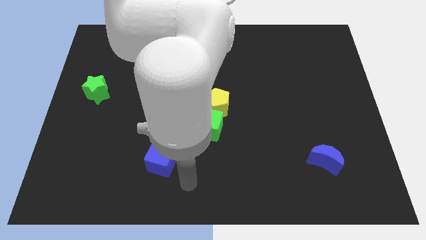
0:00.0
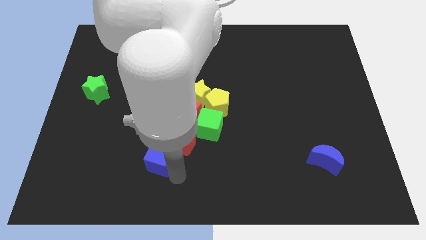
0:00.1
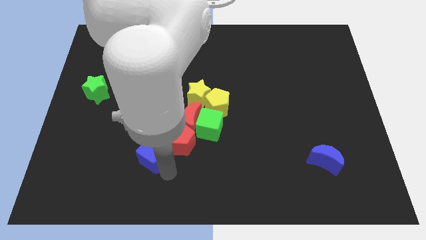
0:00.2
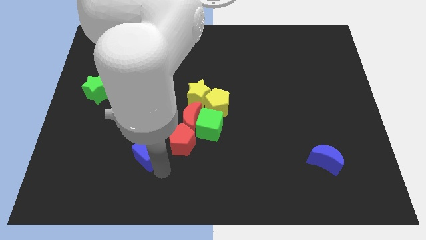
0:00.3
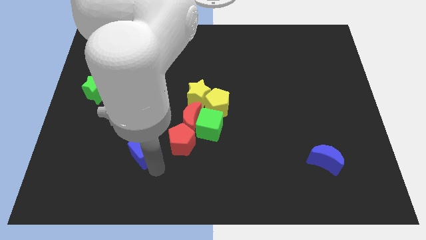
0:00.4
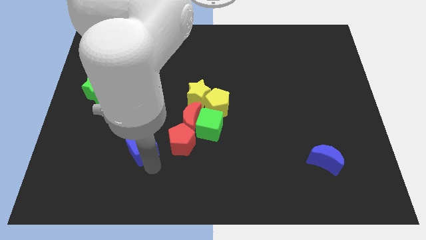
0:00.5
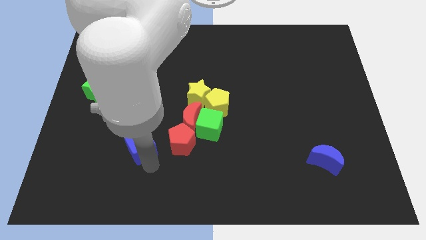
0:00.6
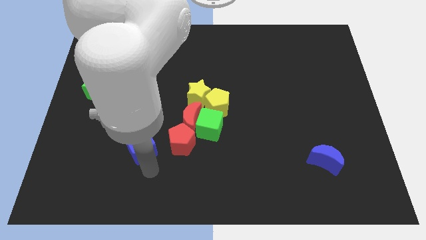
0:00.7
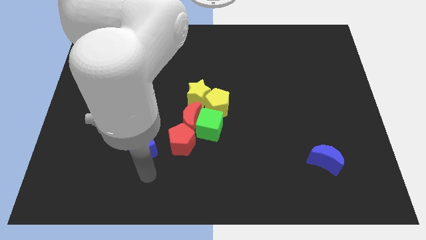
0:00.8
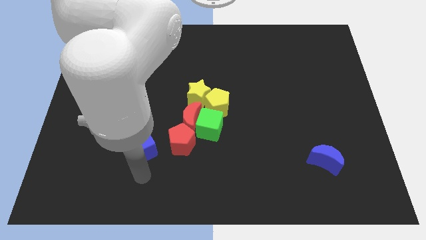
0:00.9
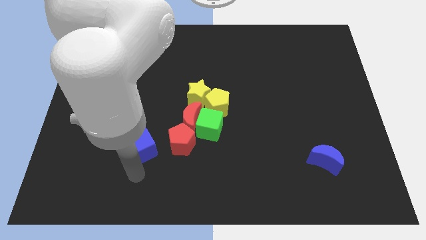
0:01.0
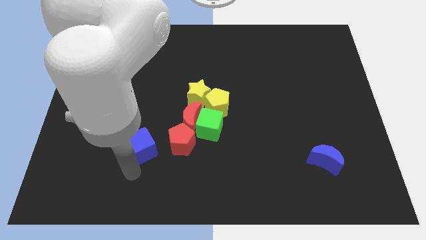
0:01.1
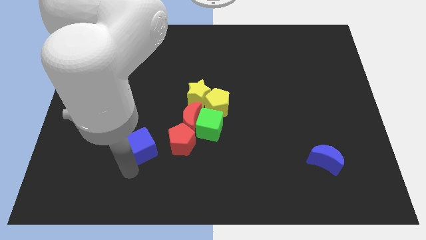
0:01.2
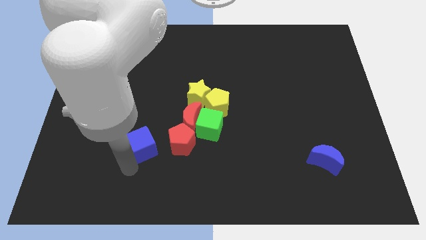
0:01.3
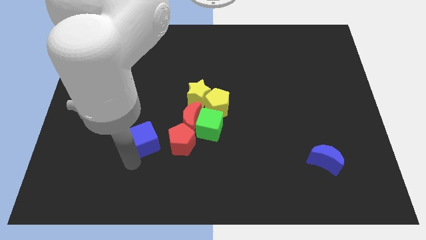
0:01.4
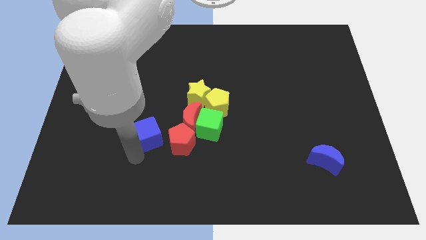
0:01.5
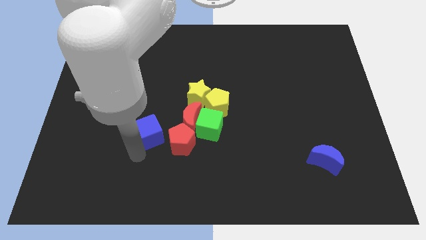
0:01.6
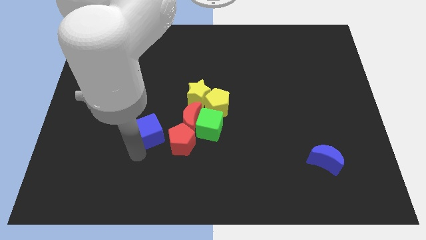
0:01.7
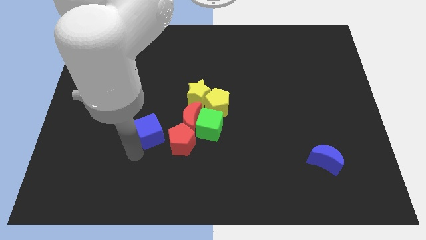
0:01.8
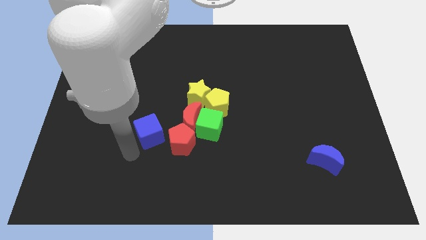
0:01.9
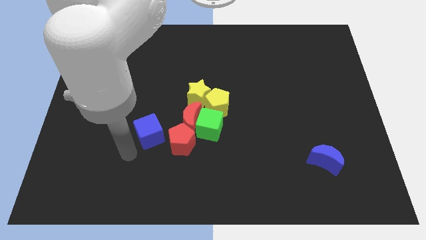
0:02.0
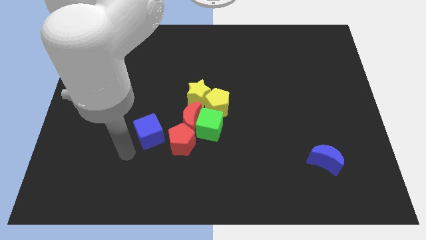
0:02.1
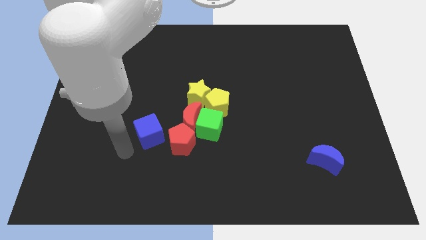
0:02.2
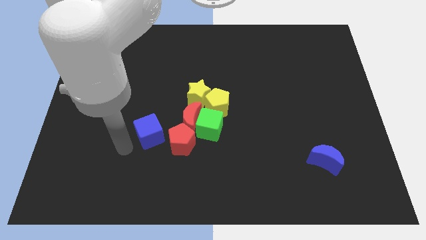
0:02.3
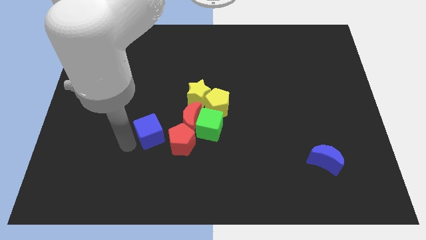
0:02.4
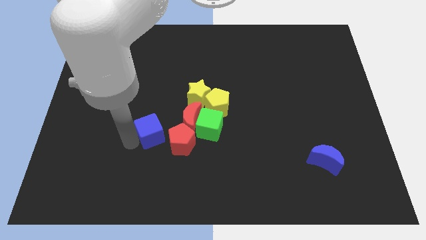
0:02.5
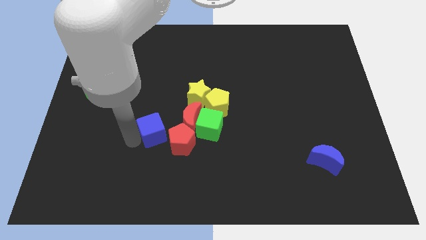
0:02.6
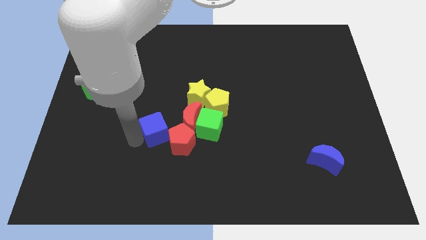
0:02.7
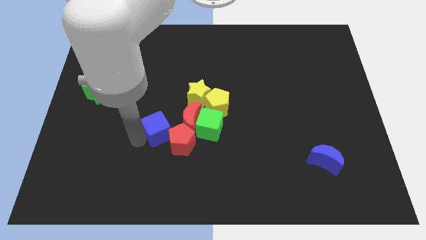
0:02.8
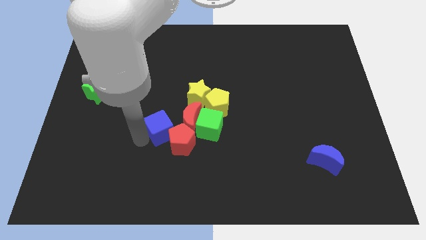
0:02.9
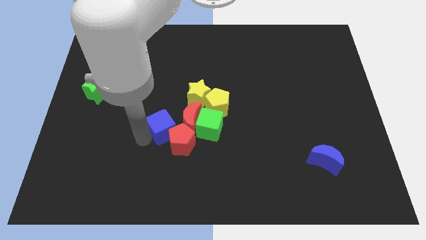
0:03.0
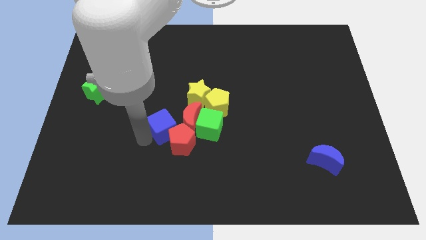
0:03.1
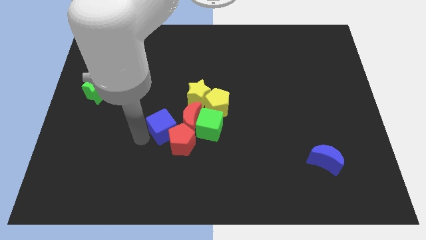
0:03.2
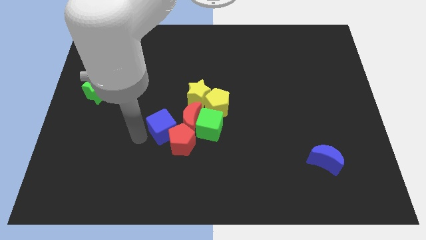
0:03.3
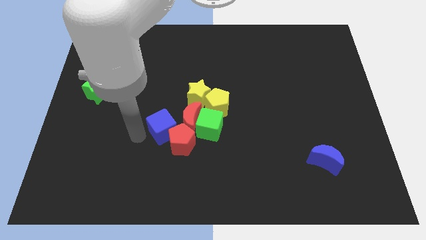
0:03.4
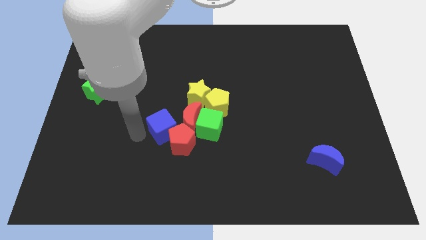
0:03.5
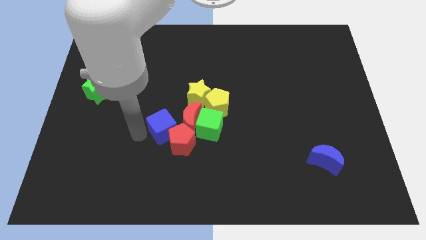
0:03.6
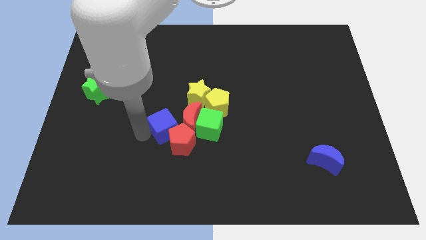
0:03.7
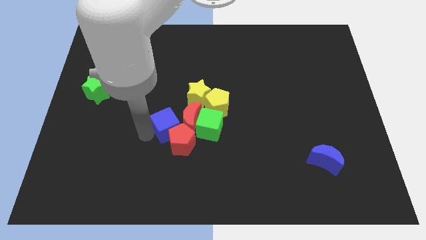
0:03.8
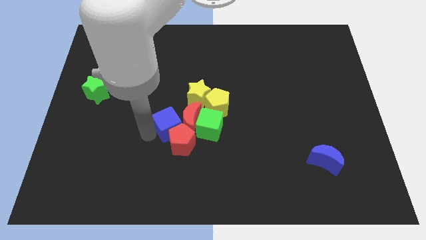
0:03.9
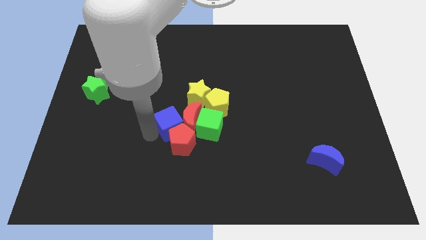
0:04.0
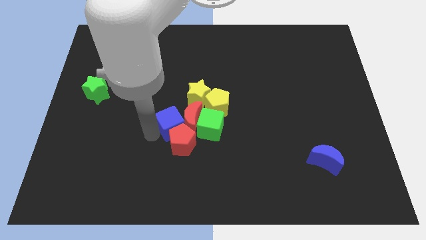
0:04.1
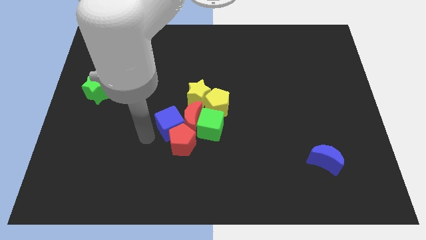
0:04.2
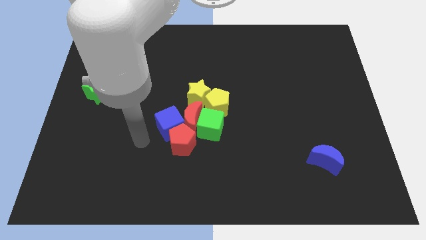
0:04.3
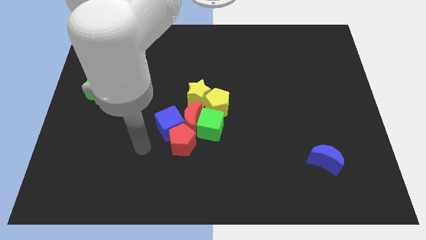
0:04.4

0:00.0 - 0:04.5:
push the blue square into the group of blocks

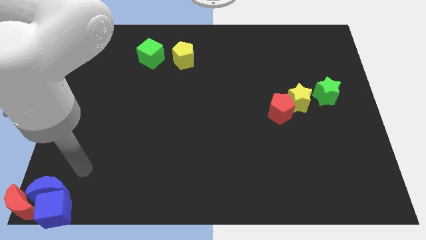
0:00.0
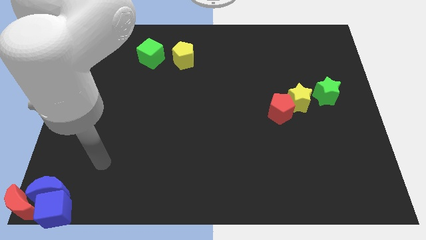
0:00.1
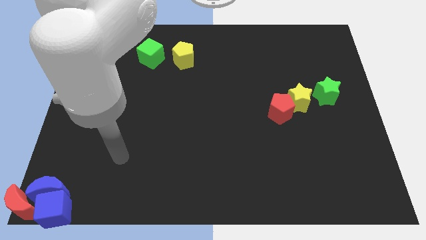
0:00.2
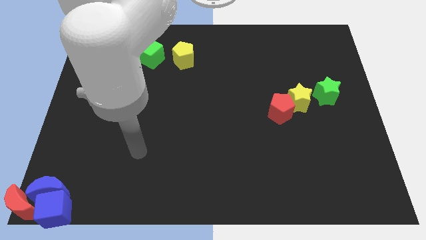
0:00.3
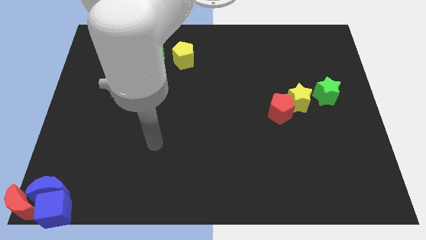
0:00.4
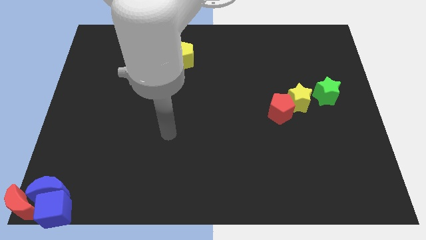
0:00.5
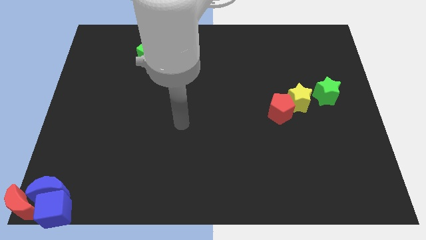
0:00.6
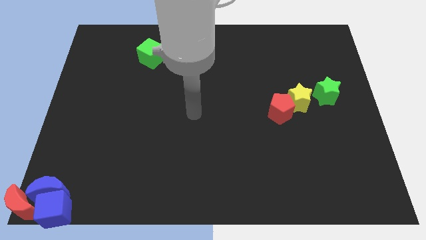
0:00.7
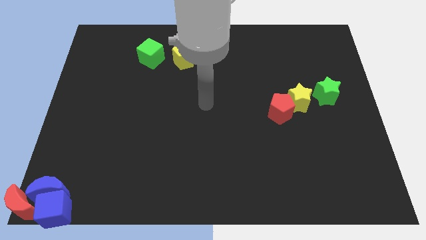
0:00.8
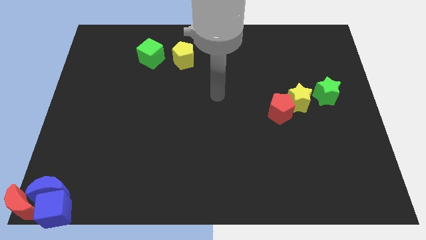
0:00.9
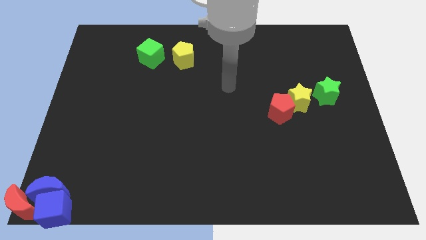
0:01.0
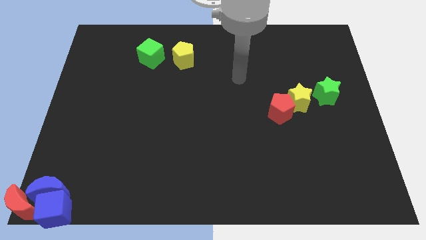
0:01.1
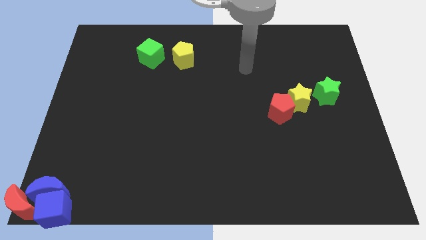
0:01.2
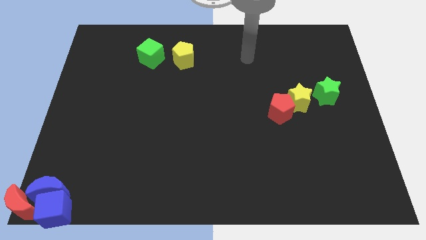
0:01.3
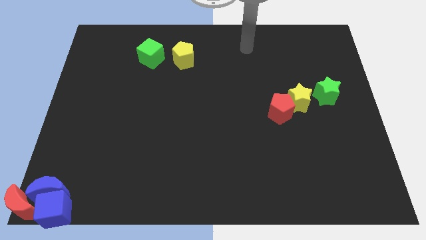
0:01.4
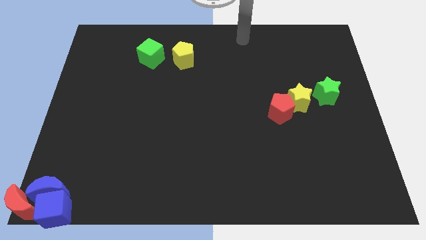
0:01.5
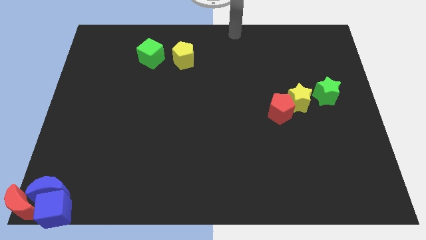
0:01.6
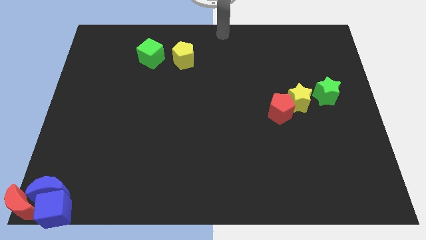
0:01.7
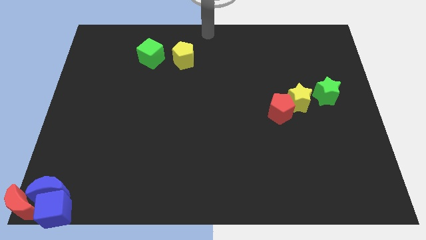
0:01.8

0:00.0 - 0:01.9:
move your hand away from the blue crescent

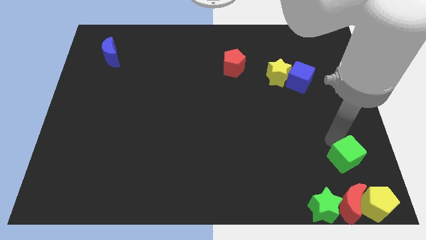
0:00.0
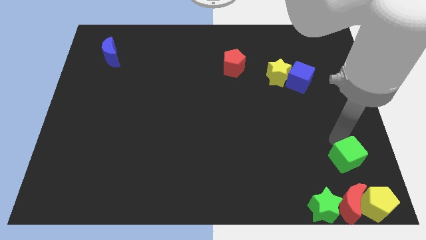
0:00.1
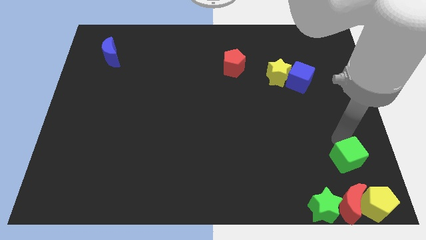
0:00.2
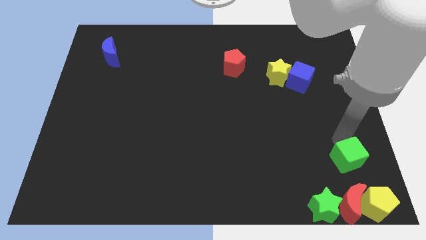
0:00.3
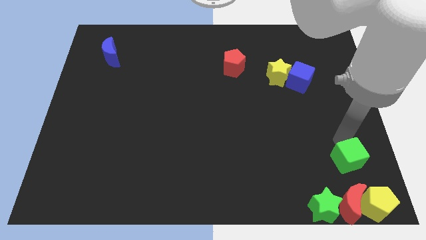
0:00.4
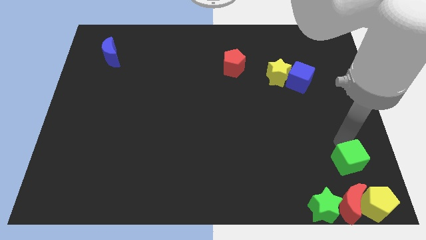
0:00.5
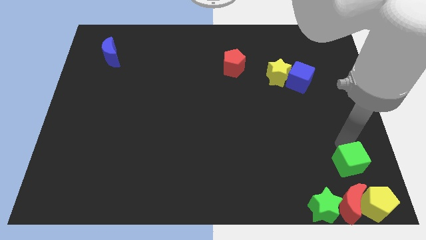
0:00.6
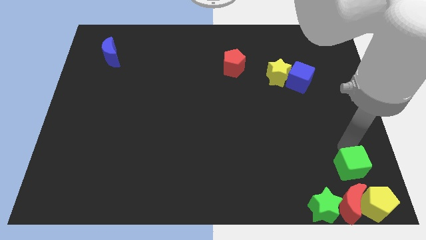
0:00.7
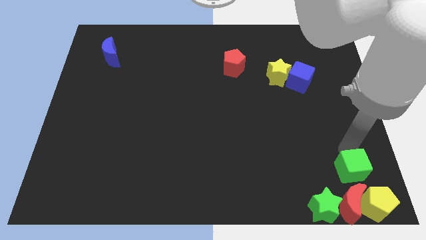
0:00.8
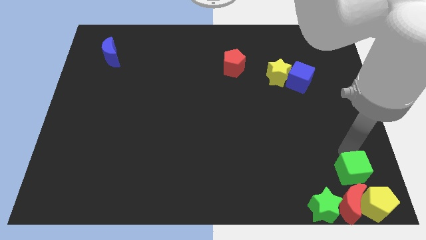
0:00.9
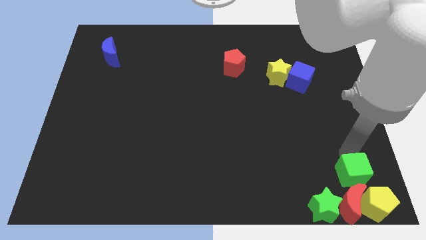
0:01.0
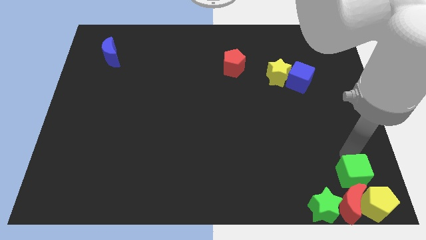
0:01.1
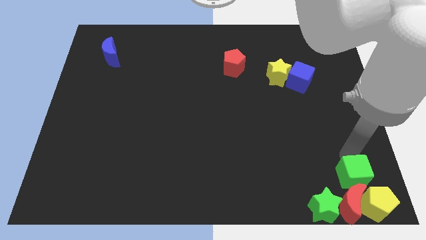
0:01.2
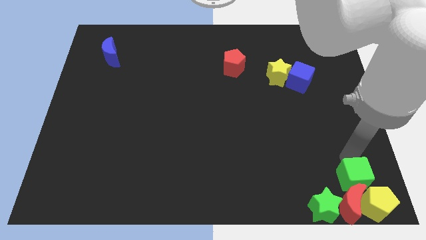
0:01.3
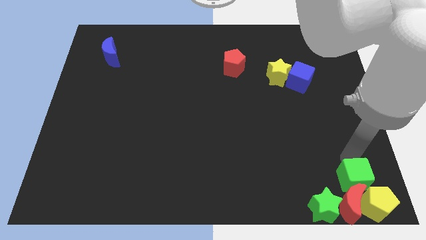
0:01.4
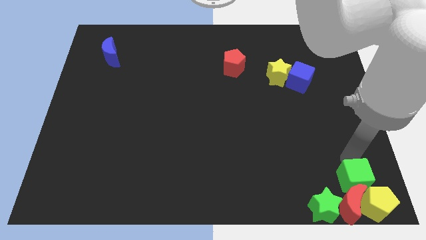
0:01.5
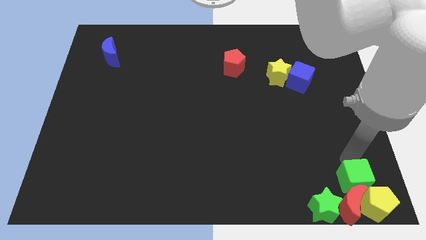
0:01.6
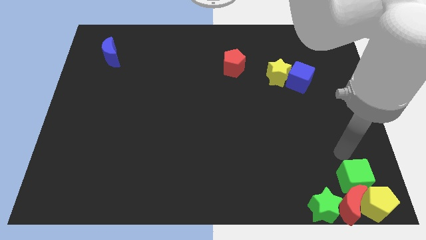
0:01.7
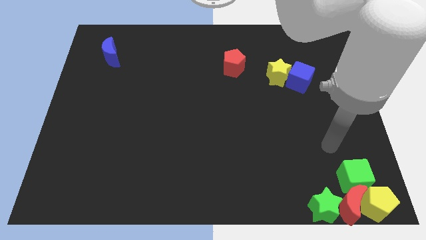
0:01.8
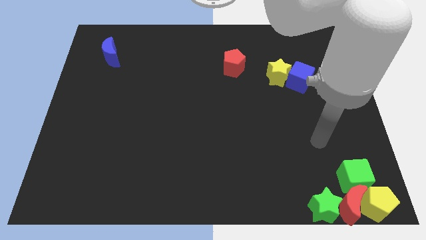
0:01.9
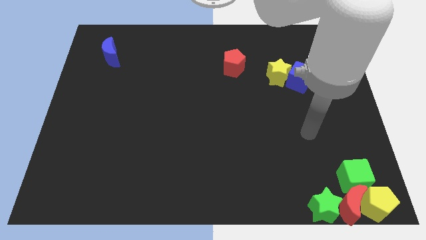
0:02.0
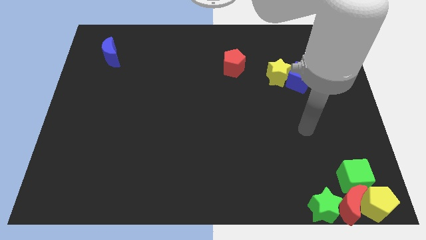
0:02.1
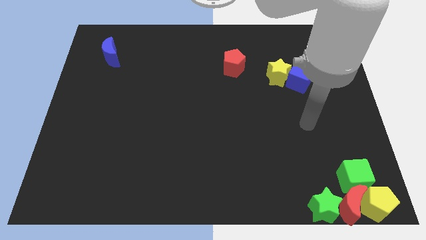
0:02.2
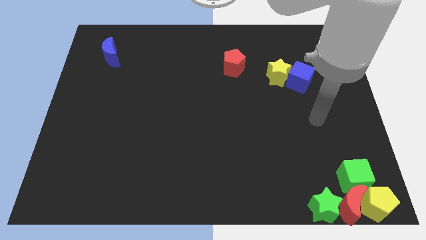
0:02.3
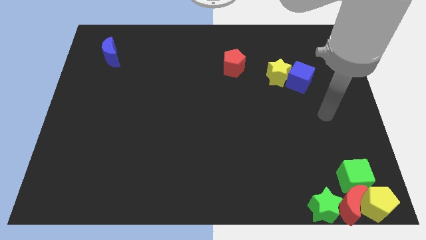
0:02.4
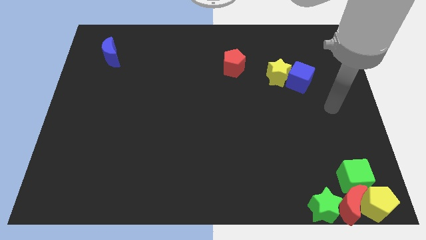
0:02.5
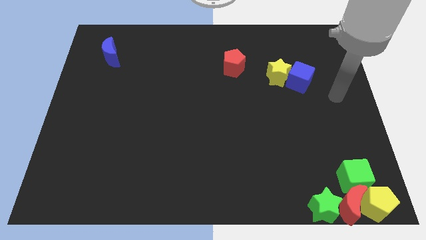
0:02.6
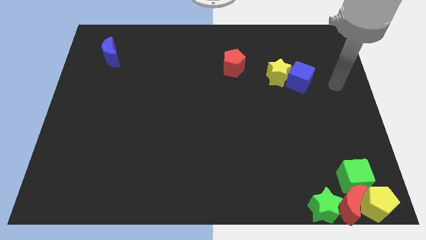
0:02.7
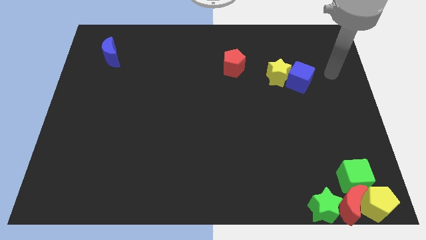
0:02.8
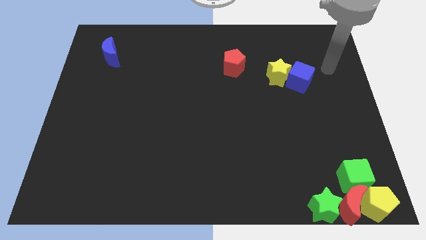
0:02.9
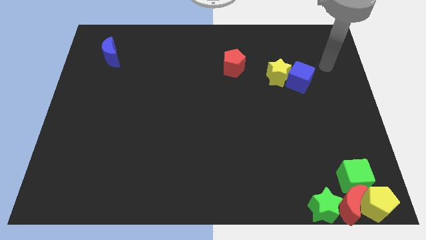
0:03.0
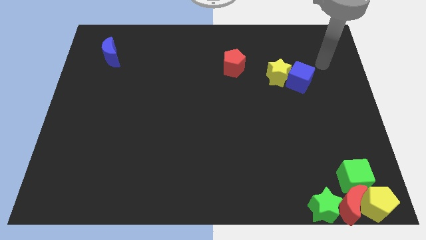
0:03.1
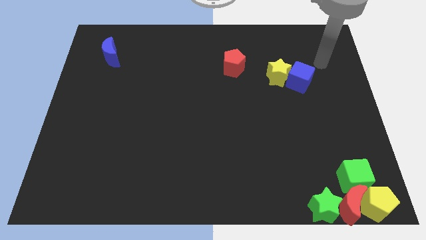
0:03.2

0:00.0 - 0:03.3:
push the green cube into the red crescent
